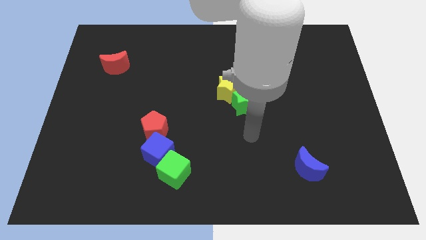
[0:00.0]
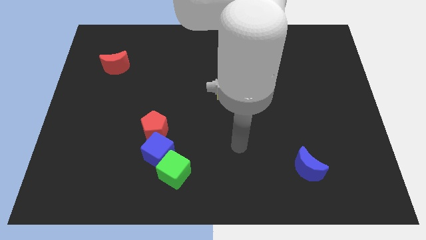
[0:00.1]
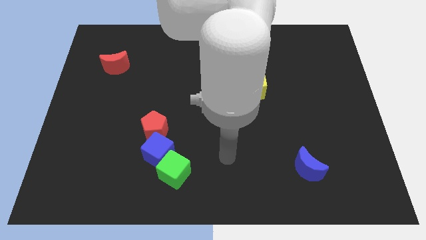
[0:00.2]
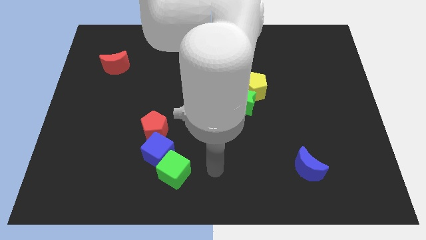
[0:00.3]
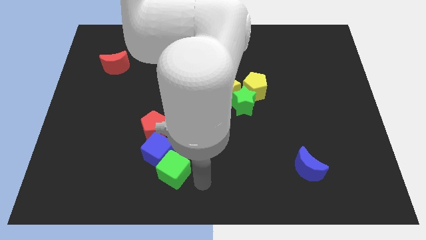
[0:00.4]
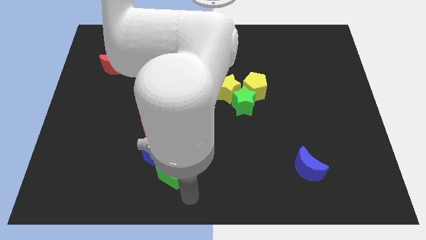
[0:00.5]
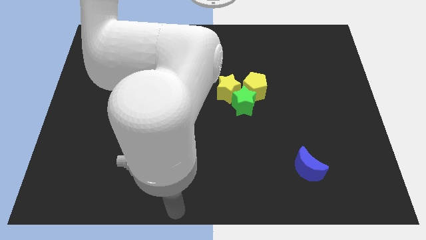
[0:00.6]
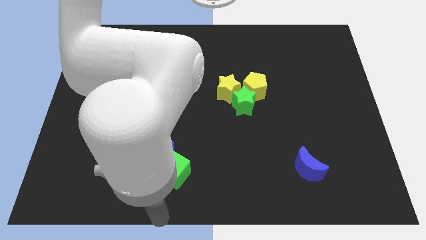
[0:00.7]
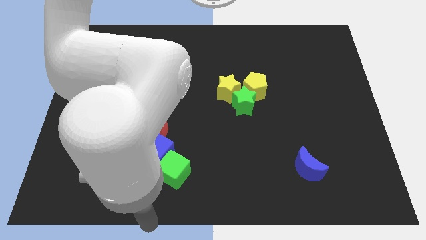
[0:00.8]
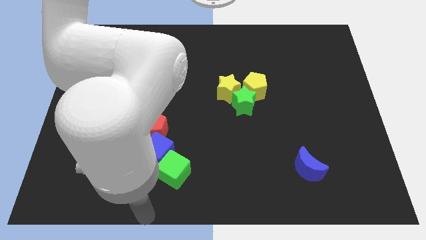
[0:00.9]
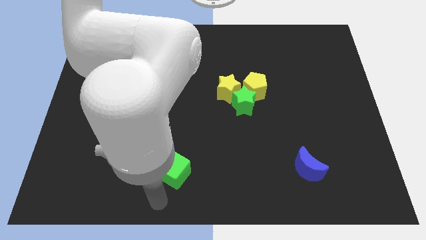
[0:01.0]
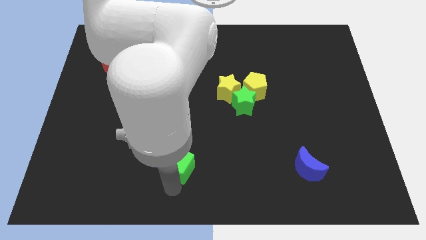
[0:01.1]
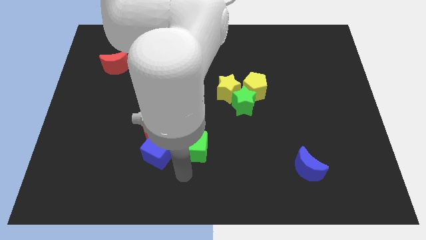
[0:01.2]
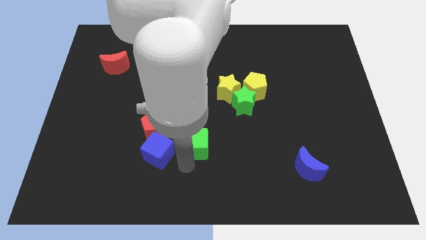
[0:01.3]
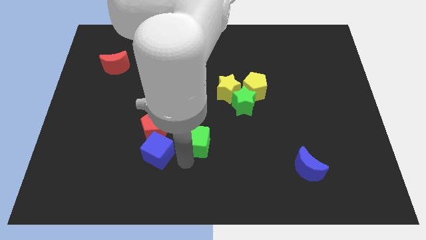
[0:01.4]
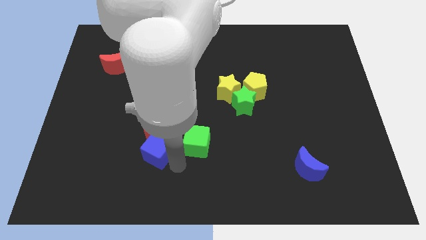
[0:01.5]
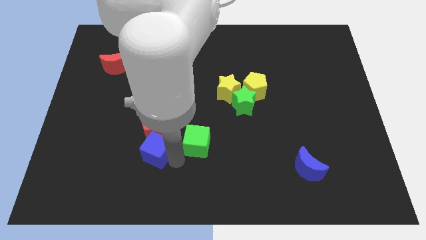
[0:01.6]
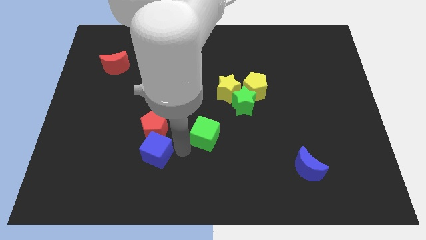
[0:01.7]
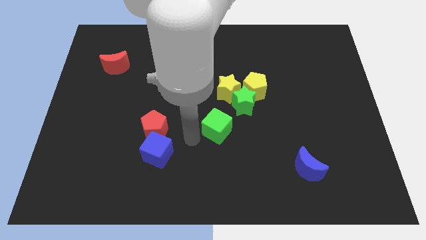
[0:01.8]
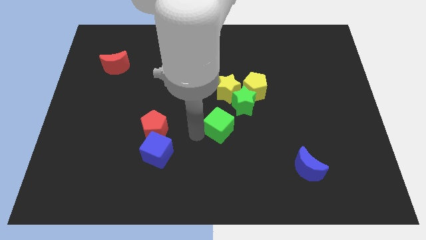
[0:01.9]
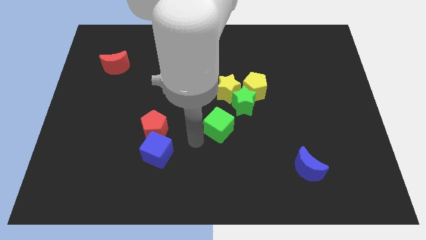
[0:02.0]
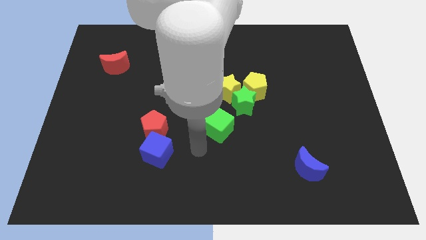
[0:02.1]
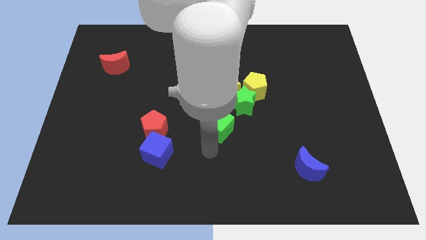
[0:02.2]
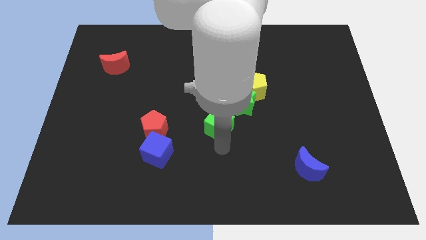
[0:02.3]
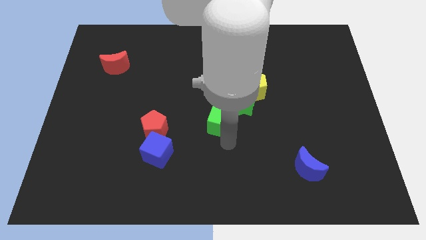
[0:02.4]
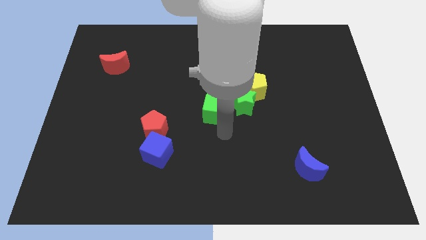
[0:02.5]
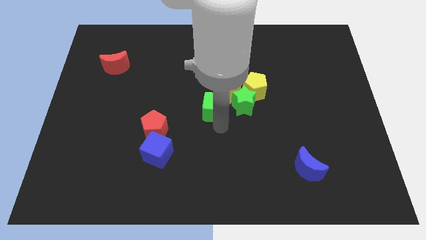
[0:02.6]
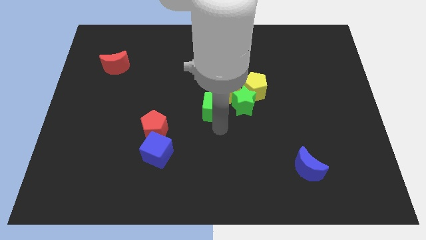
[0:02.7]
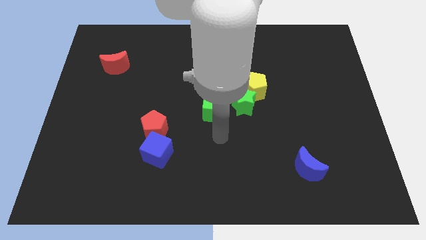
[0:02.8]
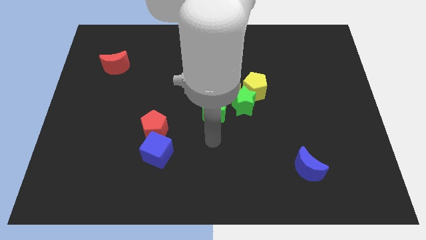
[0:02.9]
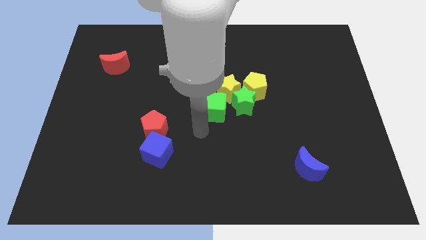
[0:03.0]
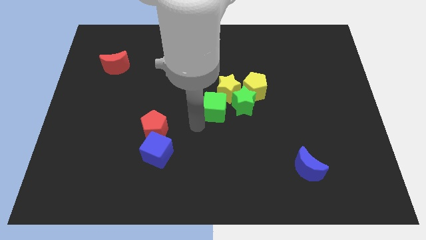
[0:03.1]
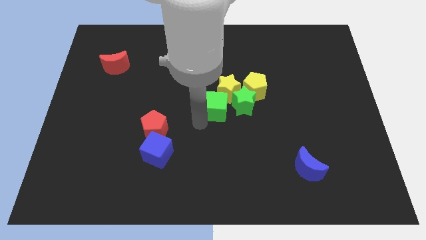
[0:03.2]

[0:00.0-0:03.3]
put the green cube at the center of the board

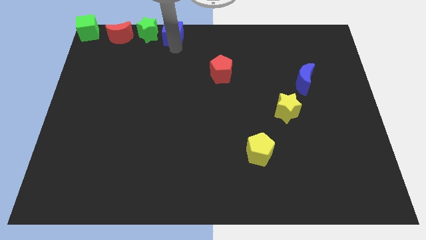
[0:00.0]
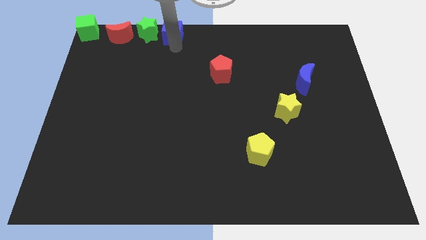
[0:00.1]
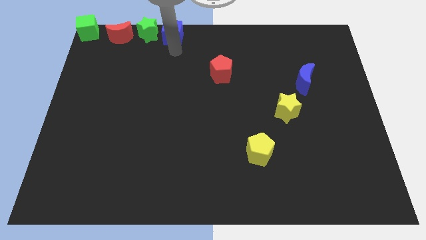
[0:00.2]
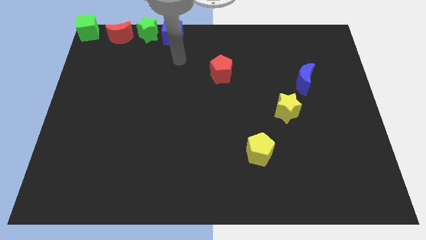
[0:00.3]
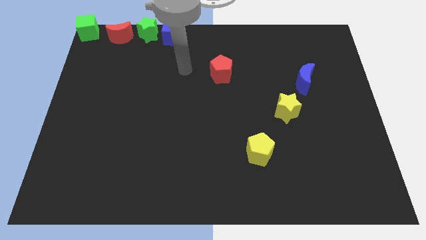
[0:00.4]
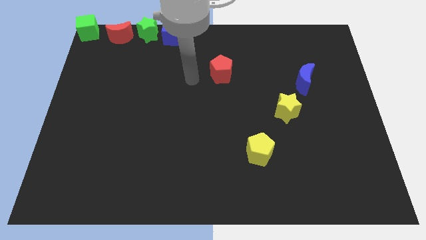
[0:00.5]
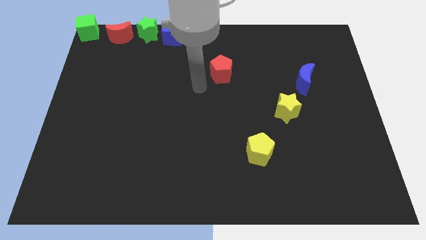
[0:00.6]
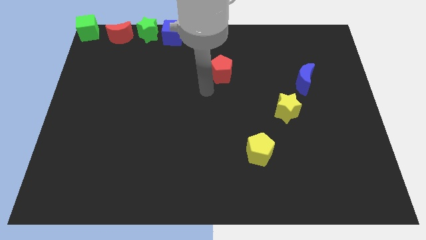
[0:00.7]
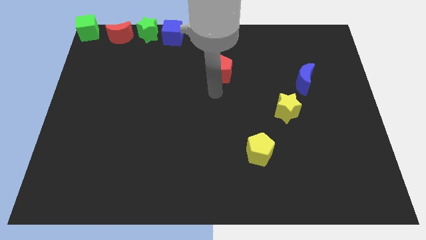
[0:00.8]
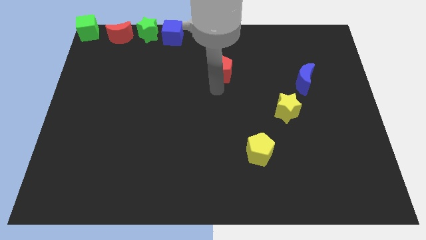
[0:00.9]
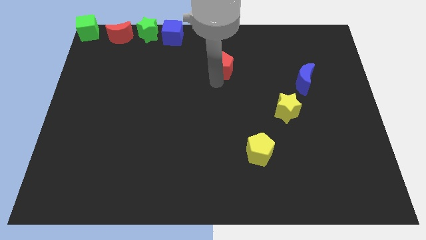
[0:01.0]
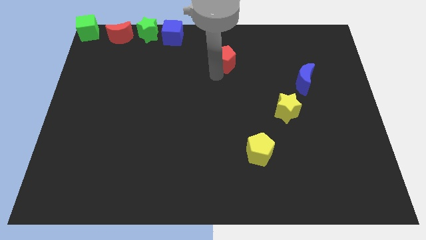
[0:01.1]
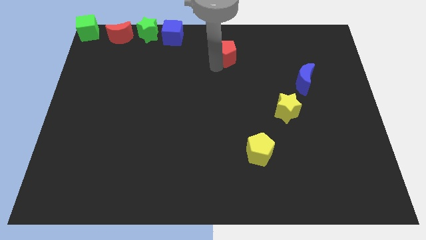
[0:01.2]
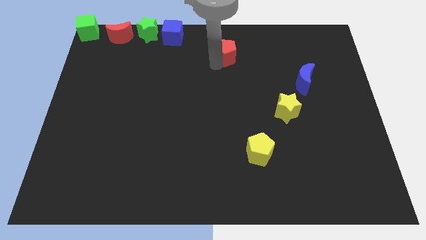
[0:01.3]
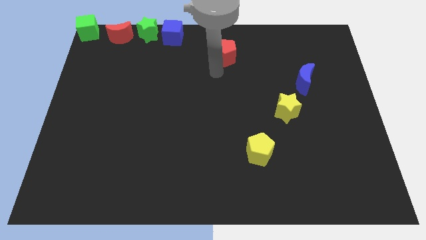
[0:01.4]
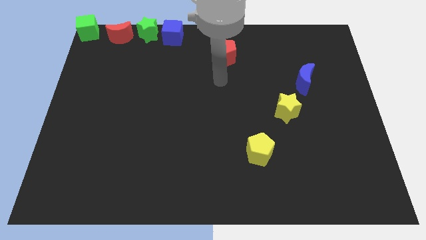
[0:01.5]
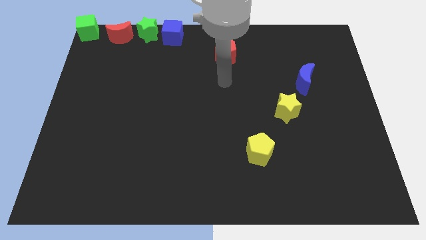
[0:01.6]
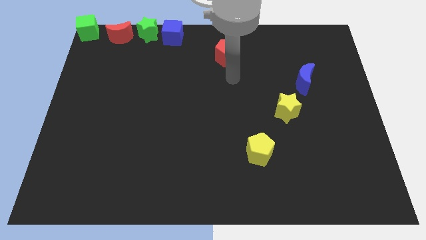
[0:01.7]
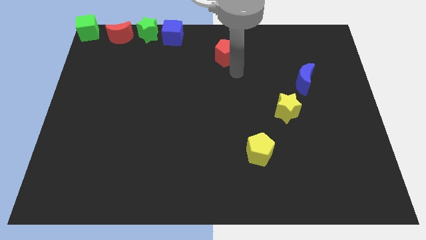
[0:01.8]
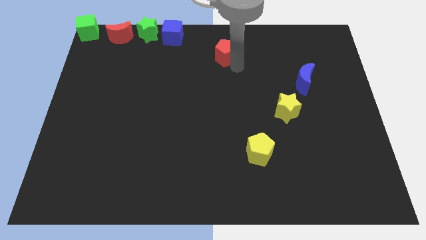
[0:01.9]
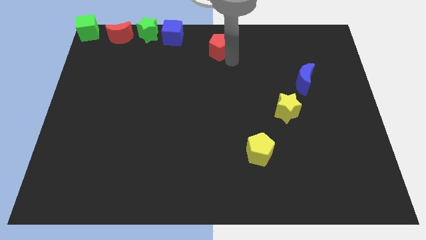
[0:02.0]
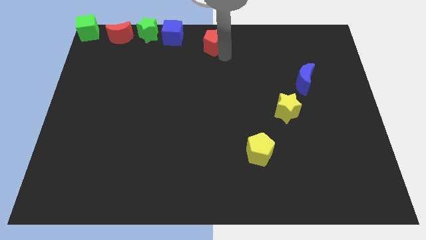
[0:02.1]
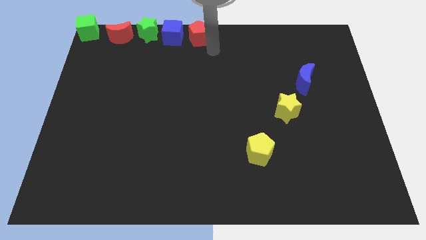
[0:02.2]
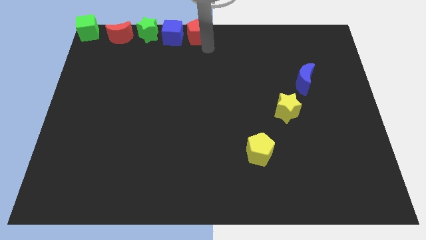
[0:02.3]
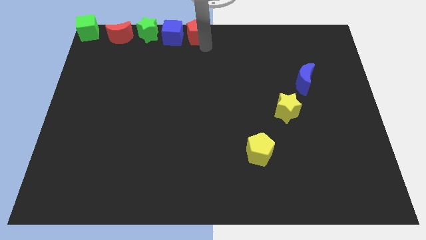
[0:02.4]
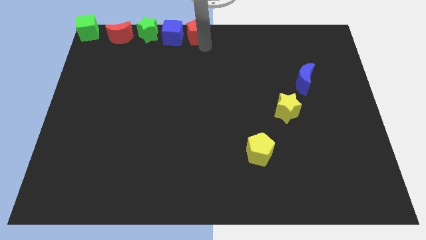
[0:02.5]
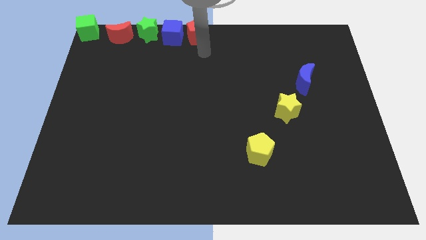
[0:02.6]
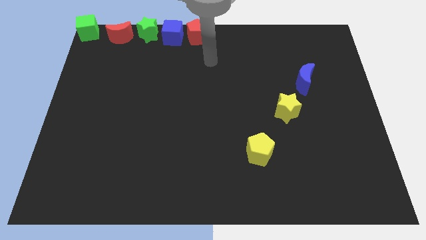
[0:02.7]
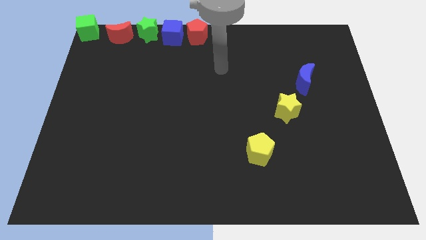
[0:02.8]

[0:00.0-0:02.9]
place the red pentagon to the right side of the blue cube

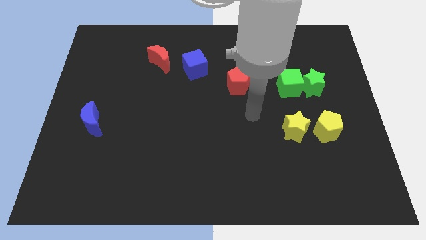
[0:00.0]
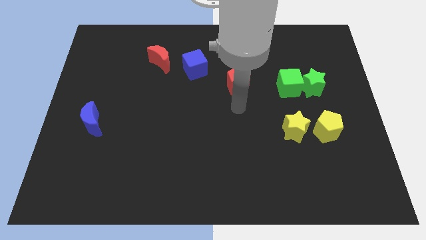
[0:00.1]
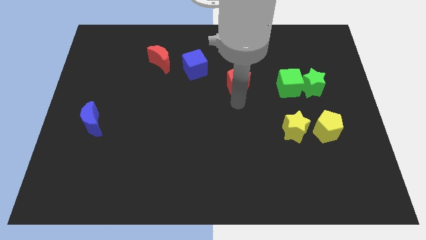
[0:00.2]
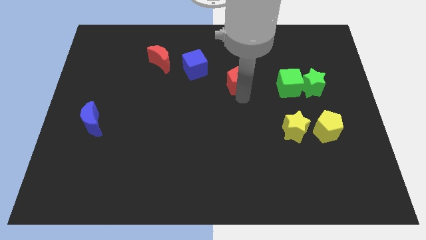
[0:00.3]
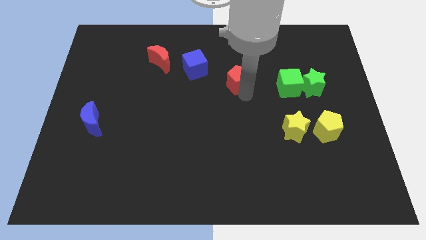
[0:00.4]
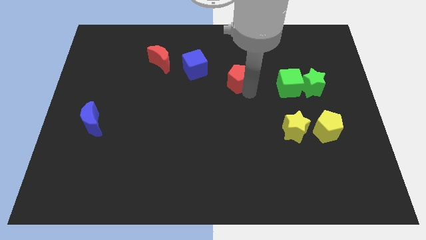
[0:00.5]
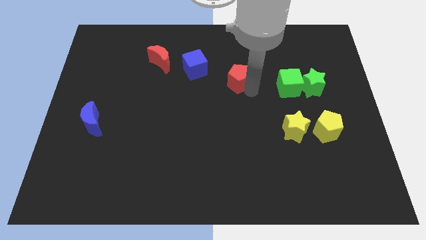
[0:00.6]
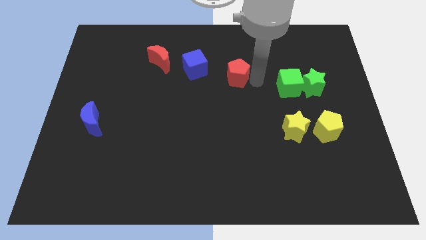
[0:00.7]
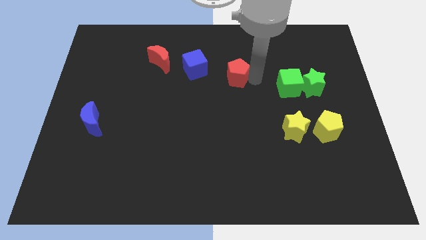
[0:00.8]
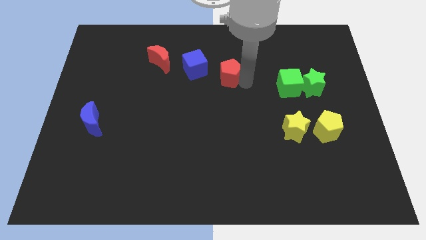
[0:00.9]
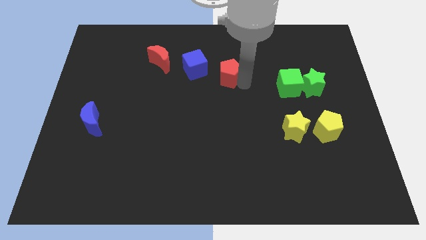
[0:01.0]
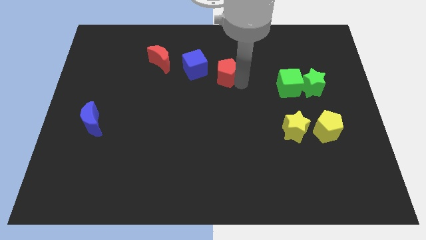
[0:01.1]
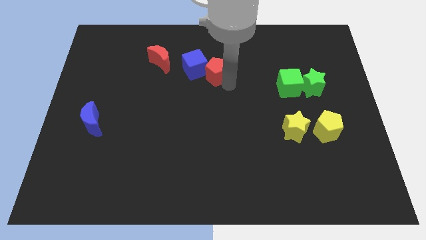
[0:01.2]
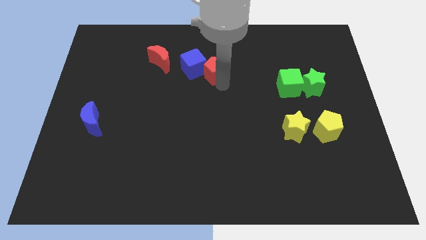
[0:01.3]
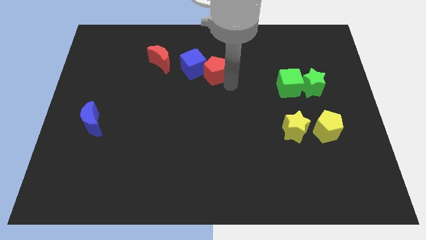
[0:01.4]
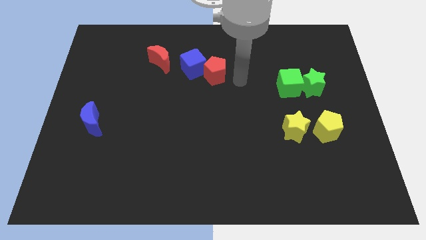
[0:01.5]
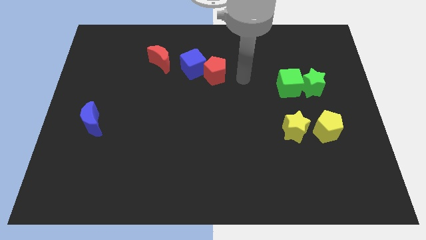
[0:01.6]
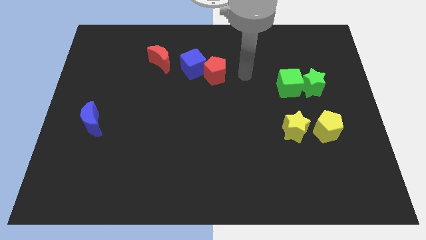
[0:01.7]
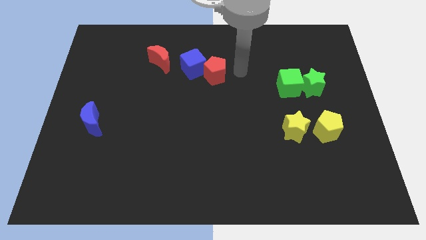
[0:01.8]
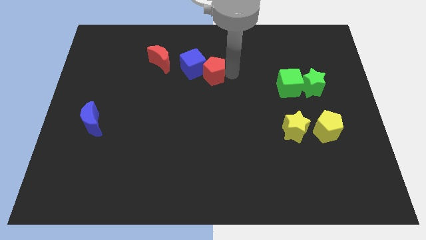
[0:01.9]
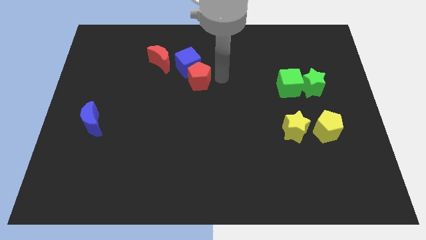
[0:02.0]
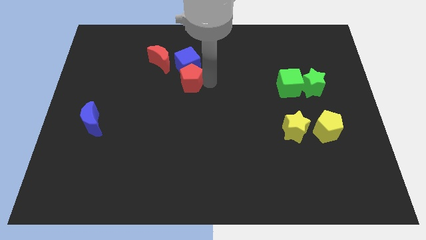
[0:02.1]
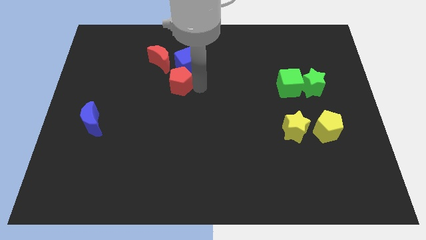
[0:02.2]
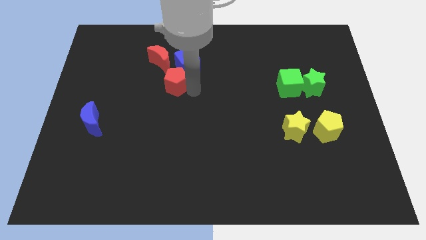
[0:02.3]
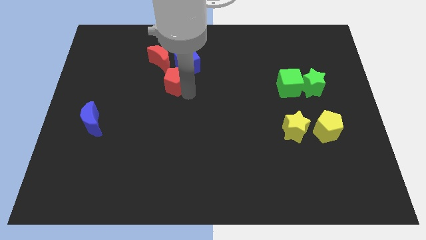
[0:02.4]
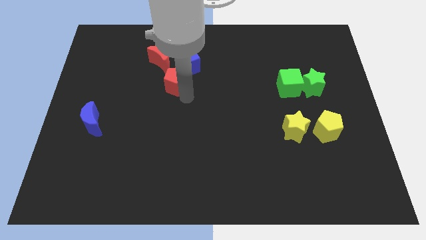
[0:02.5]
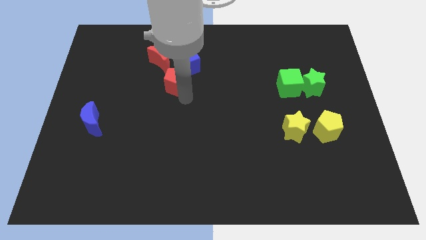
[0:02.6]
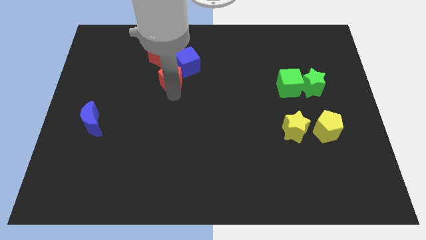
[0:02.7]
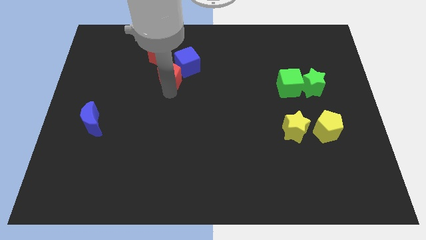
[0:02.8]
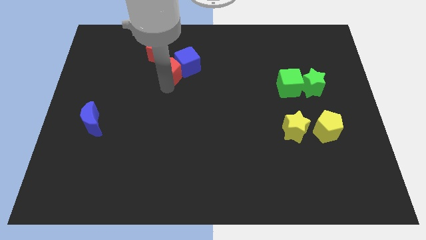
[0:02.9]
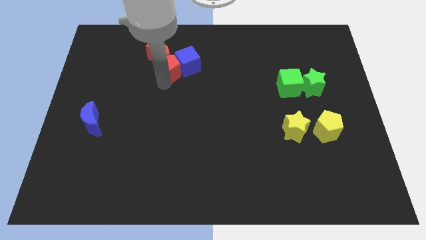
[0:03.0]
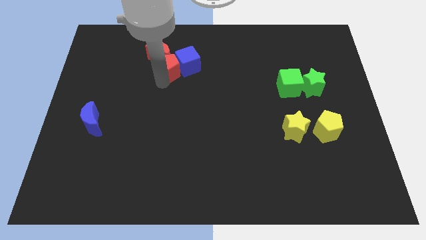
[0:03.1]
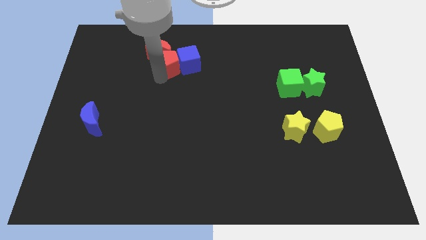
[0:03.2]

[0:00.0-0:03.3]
slide the red pentagon into the red moon and blue cube
